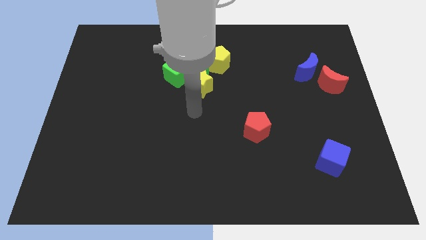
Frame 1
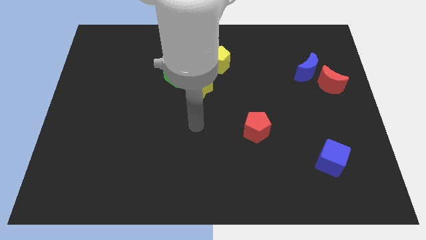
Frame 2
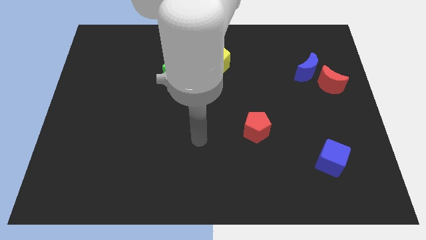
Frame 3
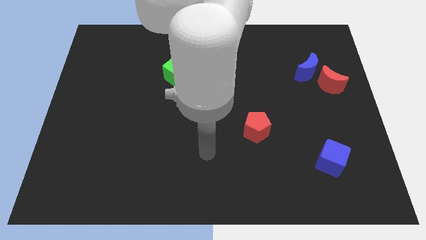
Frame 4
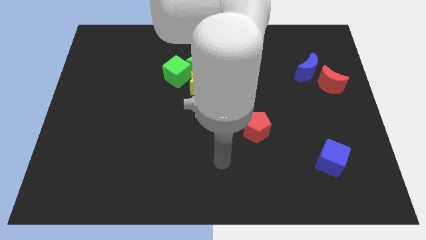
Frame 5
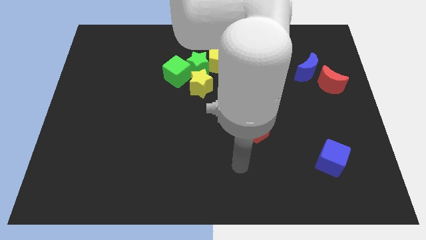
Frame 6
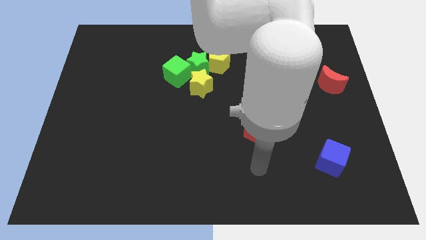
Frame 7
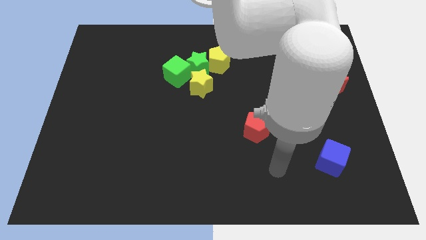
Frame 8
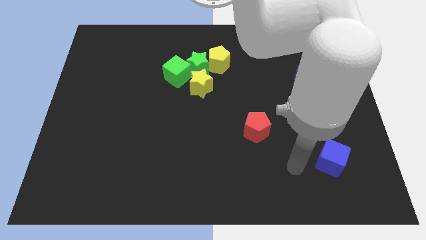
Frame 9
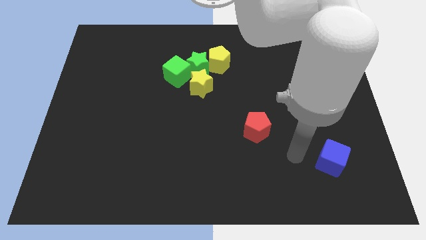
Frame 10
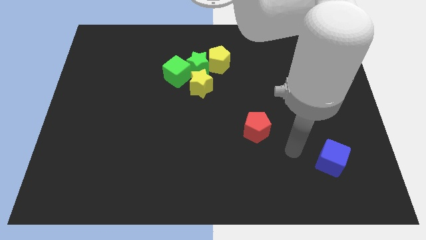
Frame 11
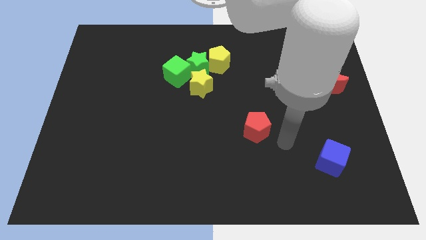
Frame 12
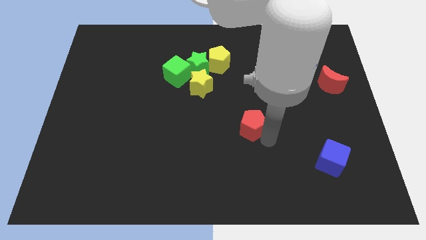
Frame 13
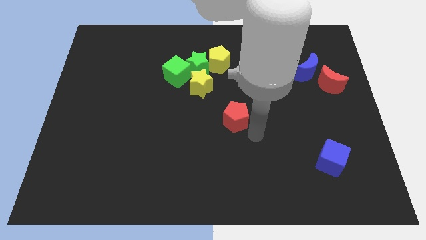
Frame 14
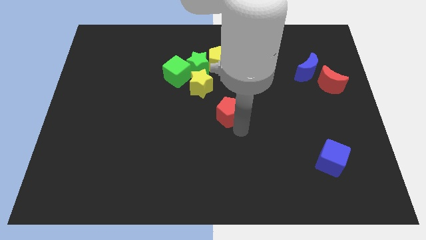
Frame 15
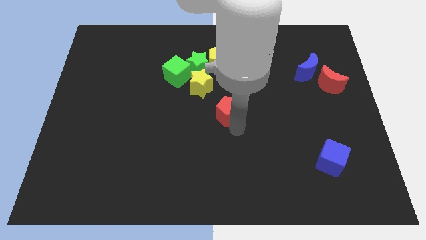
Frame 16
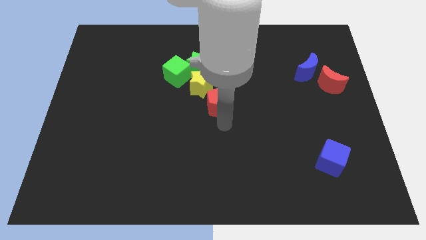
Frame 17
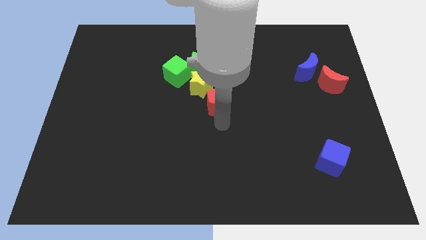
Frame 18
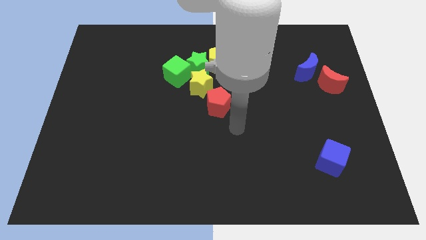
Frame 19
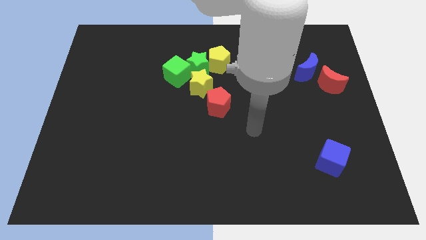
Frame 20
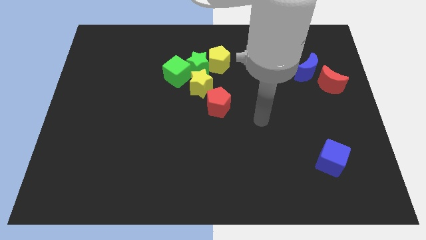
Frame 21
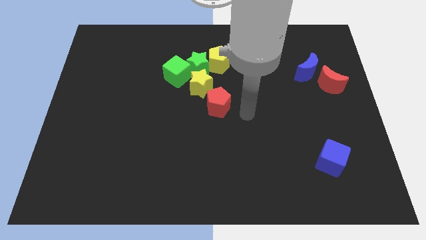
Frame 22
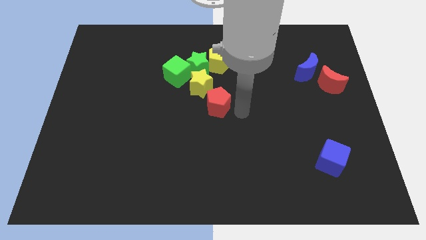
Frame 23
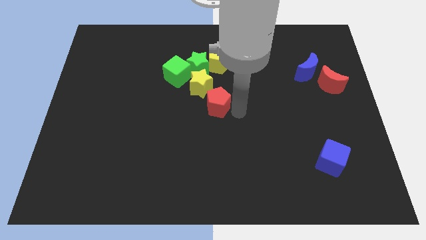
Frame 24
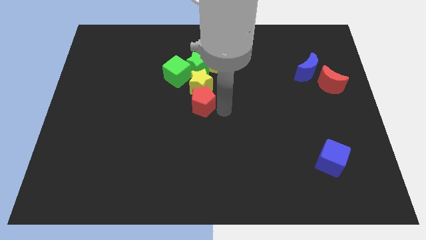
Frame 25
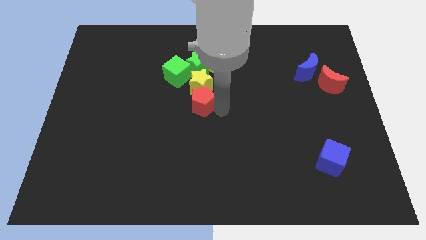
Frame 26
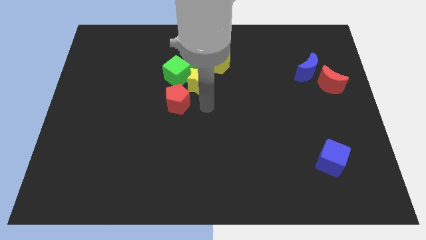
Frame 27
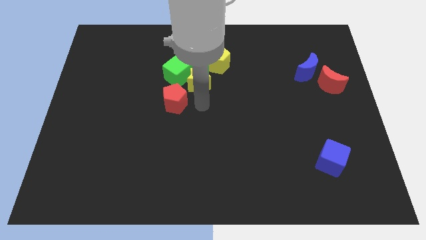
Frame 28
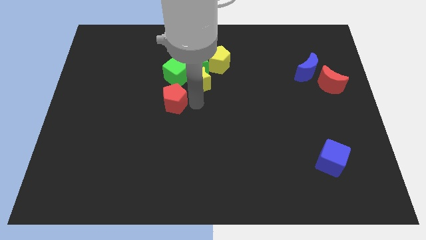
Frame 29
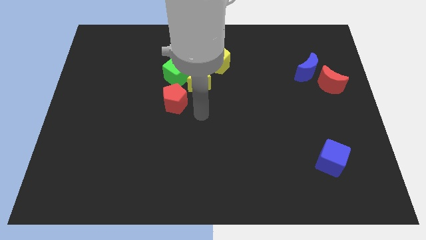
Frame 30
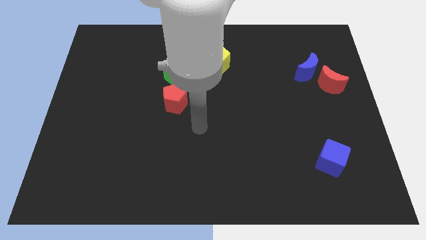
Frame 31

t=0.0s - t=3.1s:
push the red pentagon to the bottom of the green cube

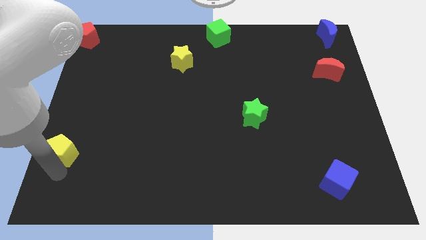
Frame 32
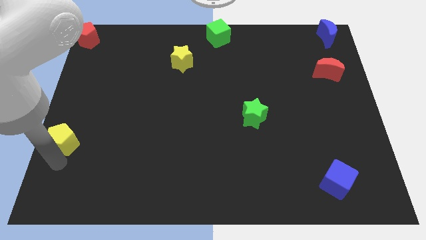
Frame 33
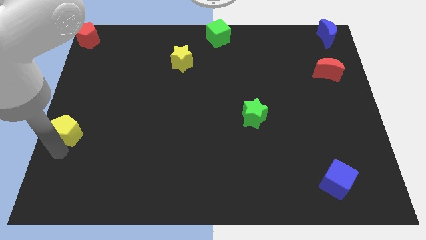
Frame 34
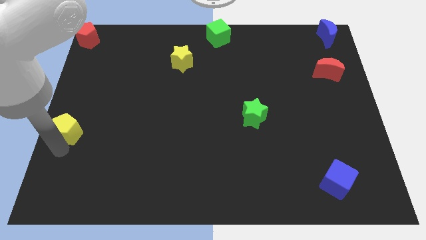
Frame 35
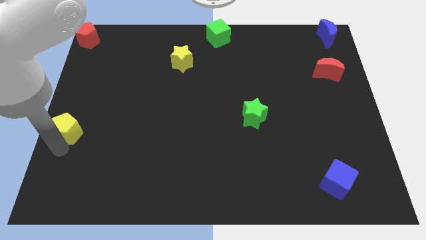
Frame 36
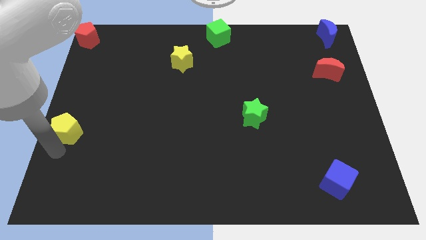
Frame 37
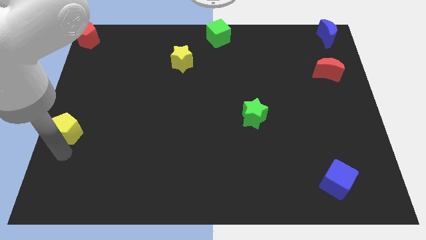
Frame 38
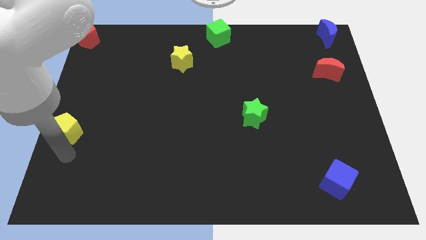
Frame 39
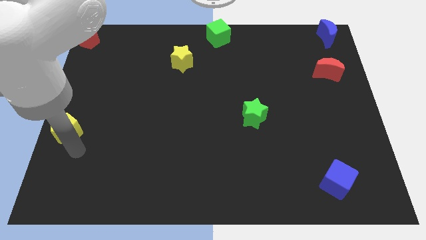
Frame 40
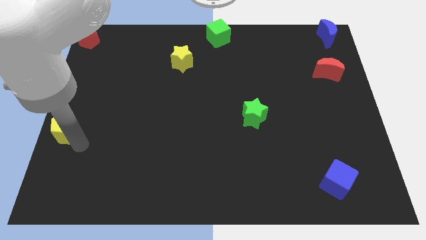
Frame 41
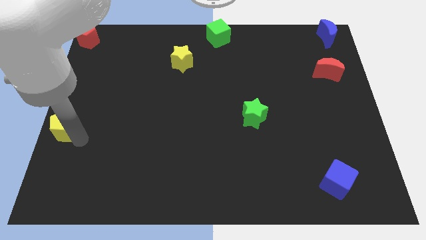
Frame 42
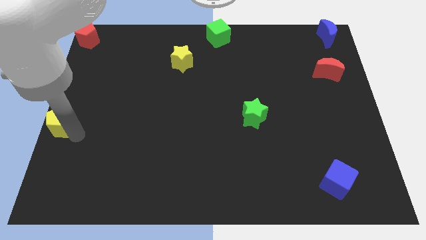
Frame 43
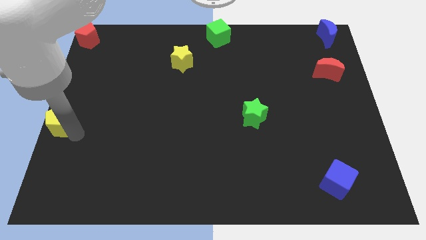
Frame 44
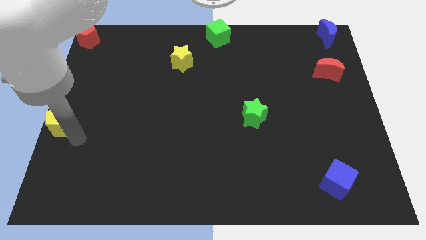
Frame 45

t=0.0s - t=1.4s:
push the yellow pentagon to the left center

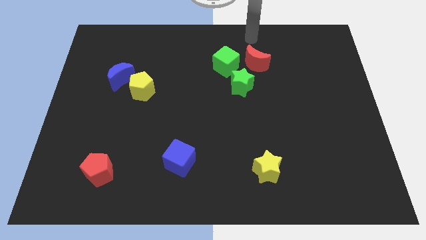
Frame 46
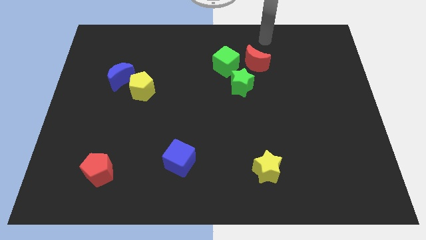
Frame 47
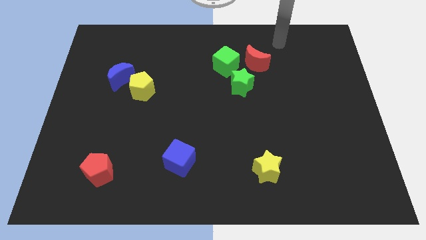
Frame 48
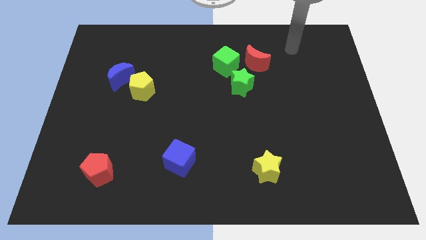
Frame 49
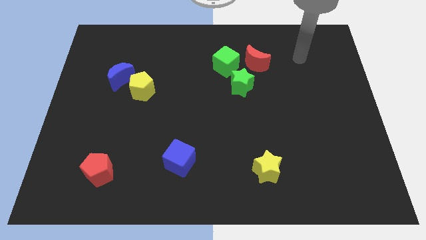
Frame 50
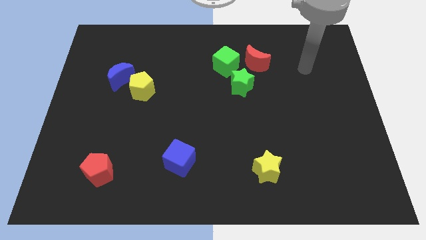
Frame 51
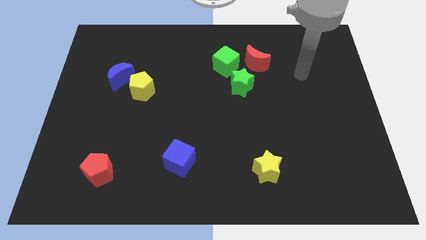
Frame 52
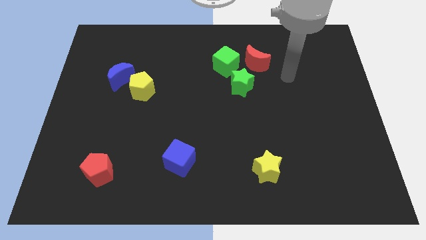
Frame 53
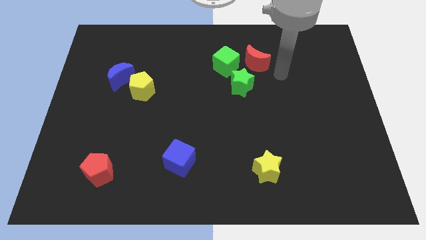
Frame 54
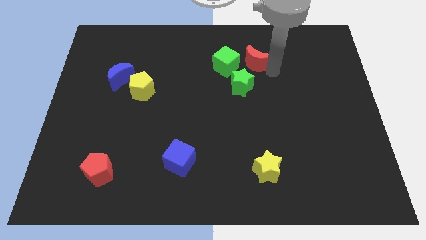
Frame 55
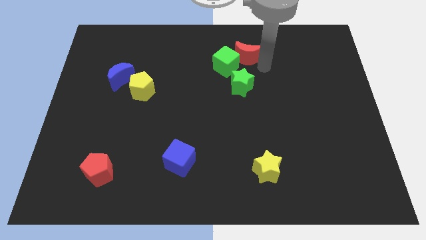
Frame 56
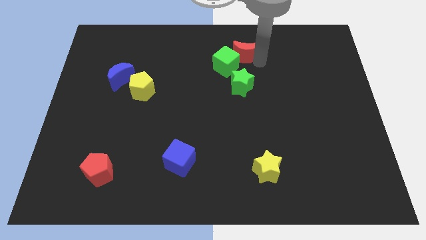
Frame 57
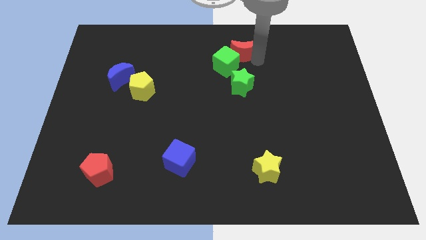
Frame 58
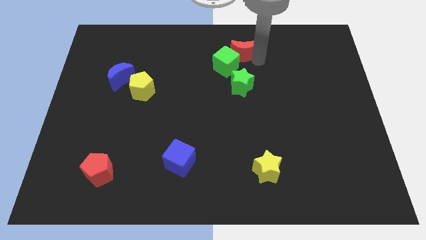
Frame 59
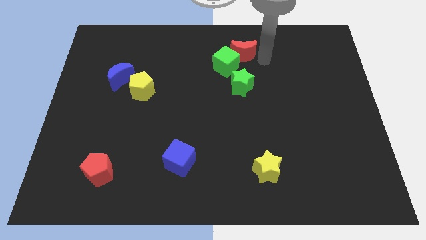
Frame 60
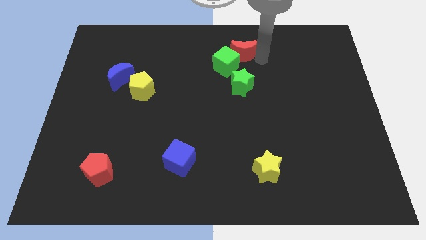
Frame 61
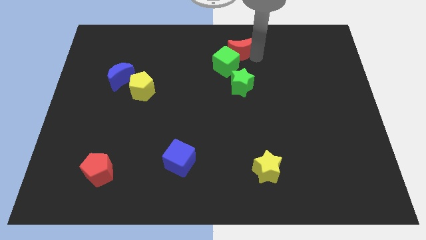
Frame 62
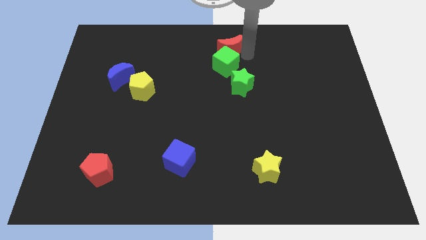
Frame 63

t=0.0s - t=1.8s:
place the red crescent to the top of the green cube

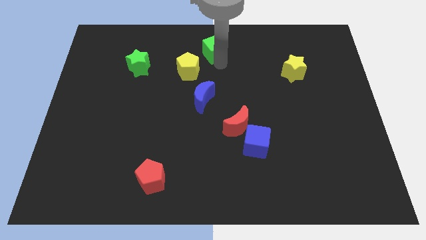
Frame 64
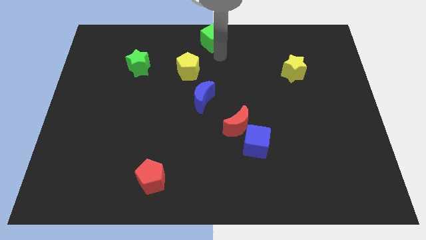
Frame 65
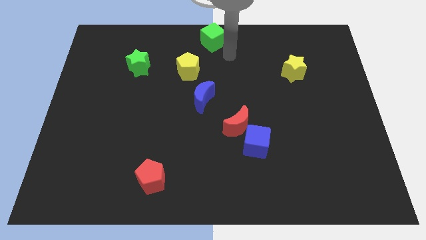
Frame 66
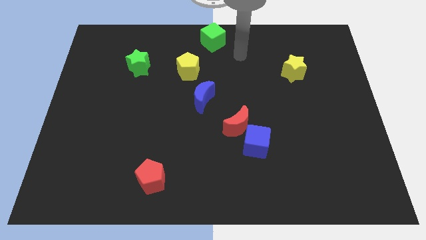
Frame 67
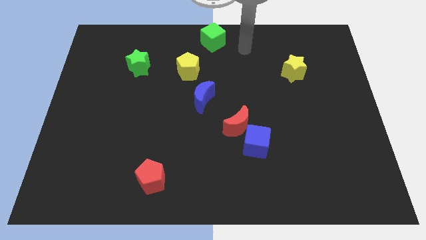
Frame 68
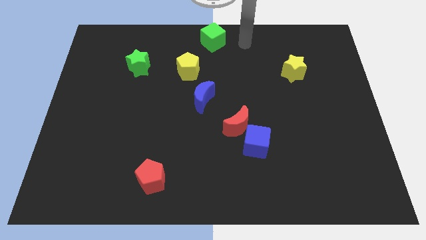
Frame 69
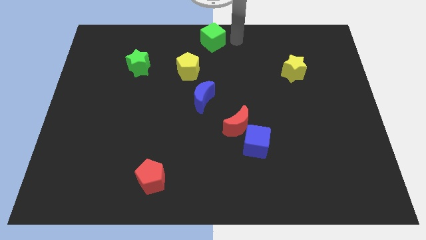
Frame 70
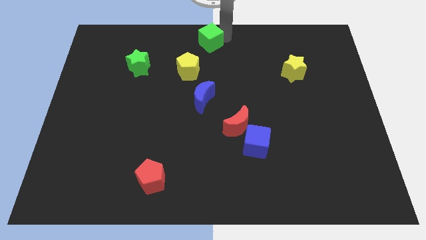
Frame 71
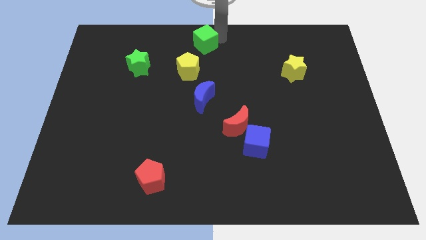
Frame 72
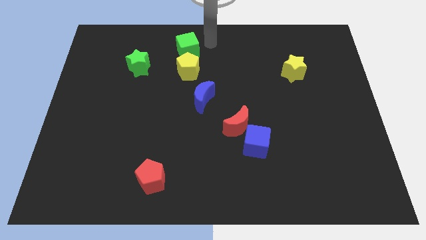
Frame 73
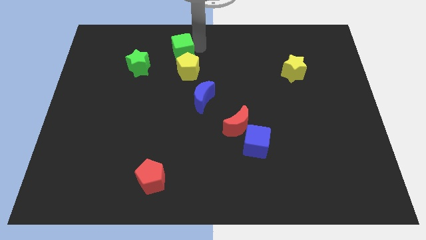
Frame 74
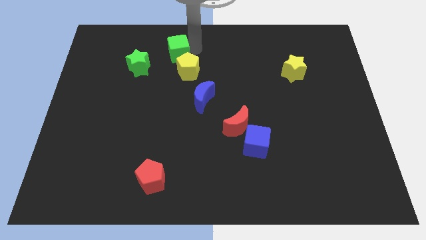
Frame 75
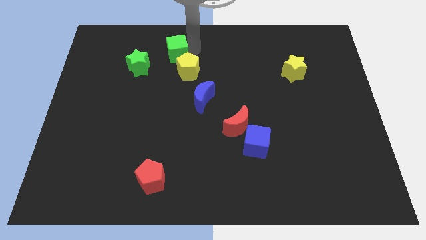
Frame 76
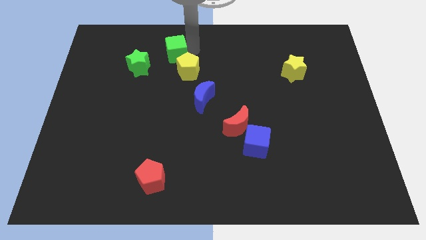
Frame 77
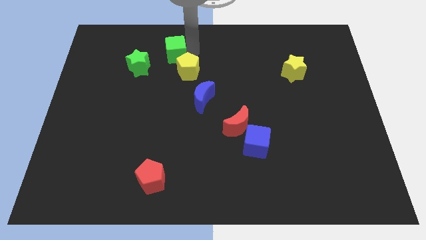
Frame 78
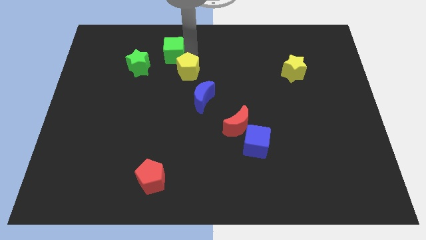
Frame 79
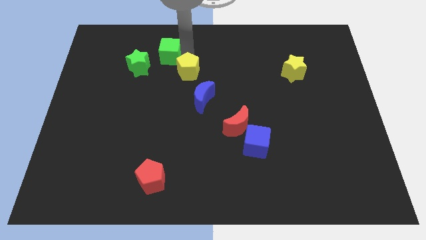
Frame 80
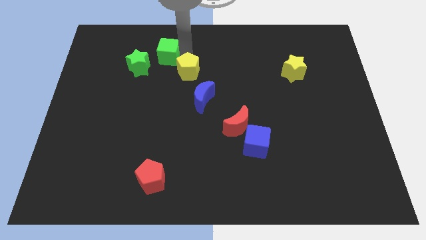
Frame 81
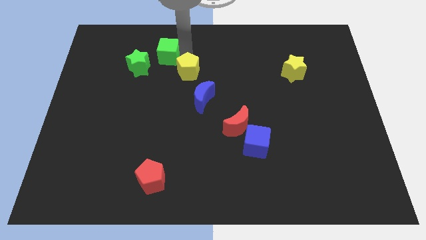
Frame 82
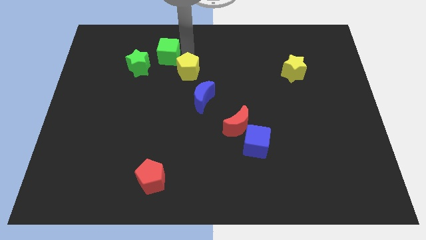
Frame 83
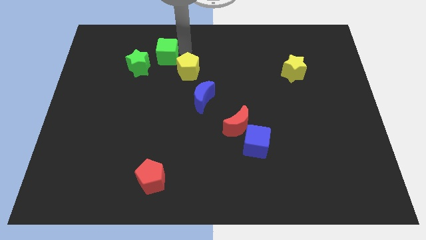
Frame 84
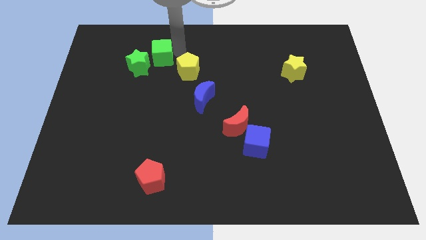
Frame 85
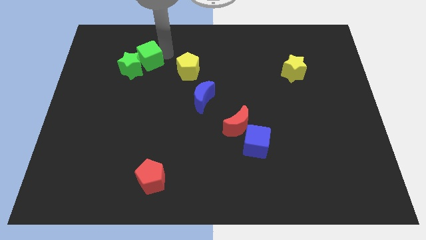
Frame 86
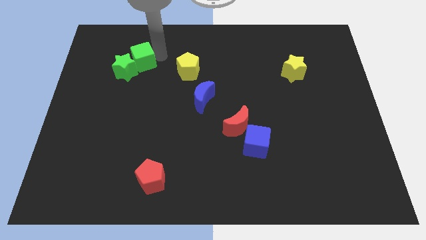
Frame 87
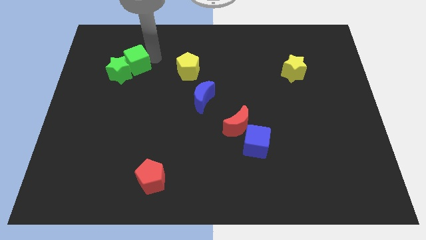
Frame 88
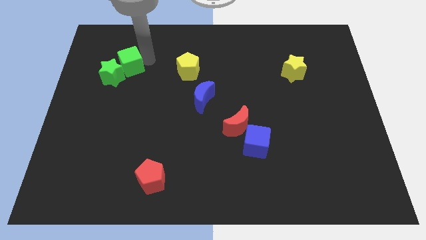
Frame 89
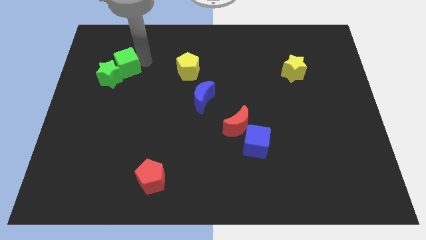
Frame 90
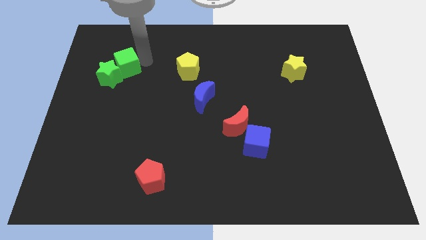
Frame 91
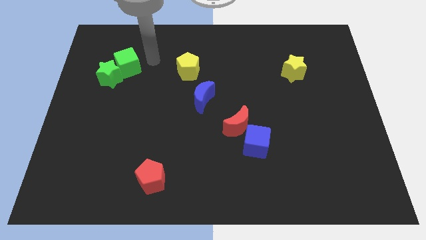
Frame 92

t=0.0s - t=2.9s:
push the green cube into green star
